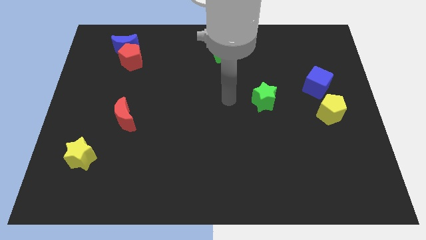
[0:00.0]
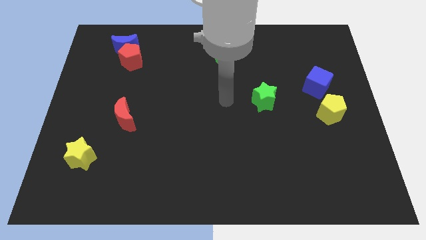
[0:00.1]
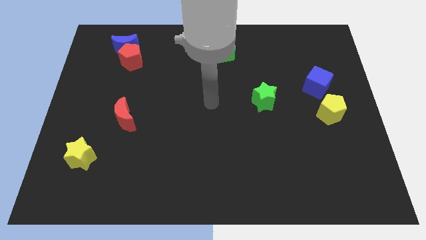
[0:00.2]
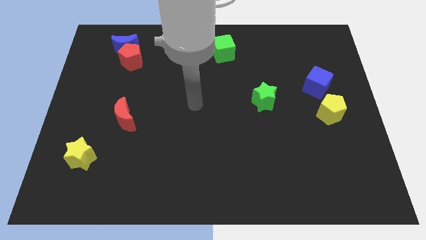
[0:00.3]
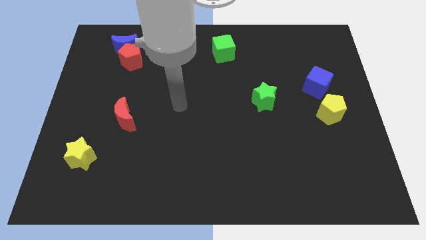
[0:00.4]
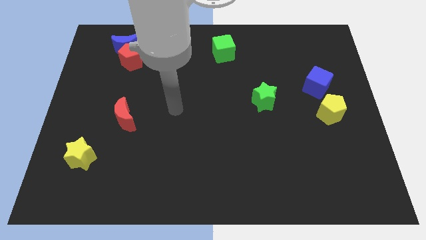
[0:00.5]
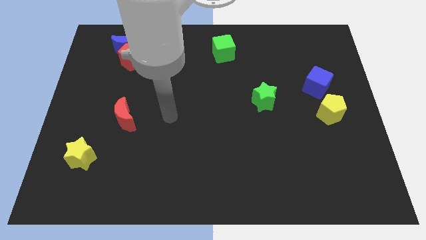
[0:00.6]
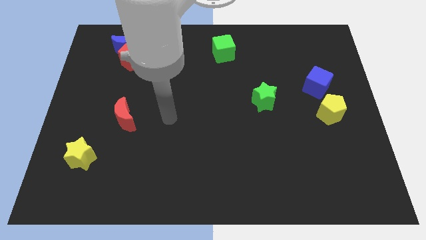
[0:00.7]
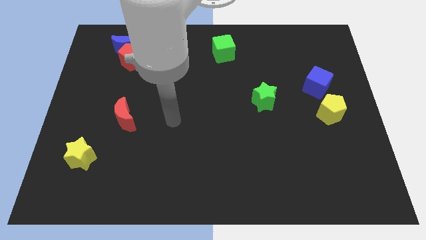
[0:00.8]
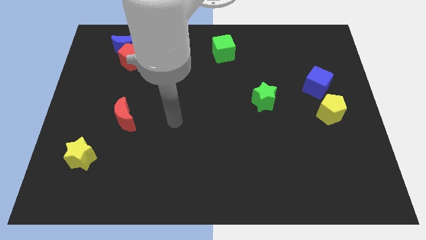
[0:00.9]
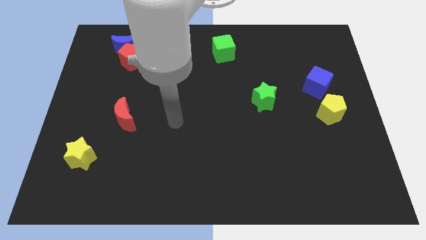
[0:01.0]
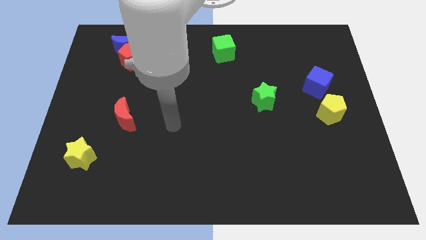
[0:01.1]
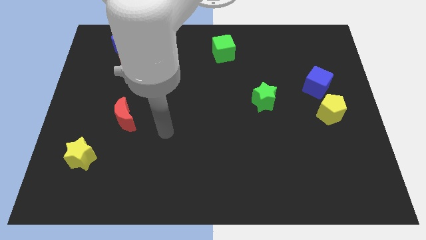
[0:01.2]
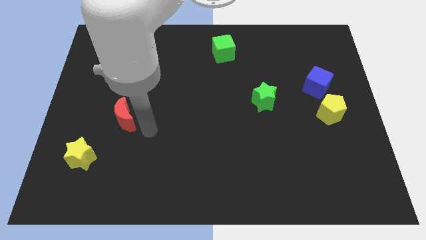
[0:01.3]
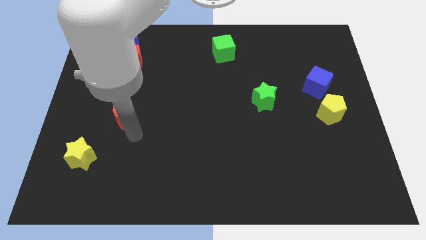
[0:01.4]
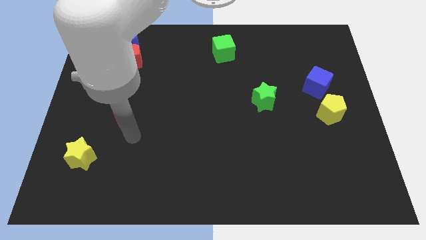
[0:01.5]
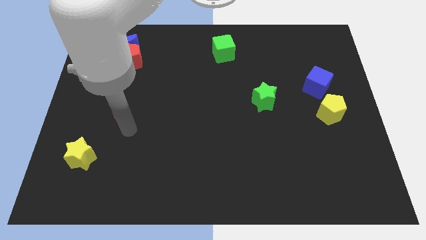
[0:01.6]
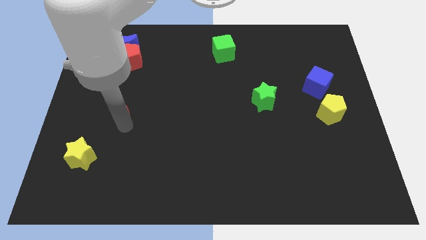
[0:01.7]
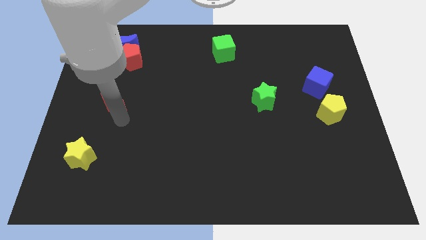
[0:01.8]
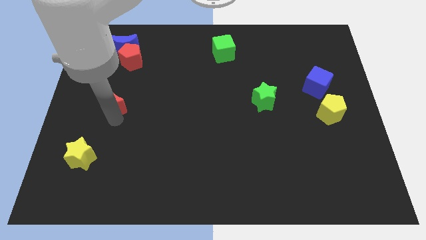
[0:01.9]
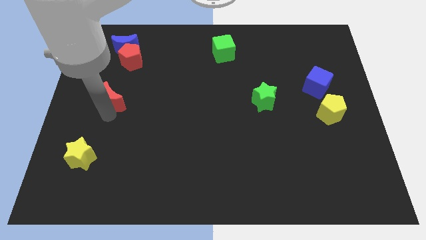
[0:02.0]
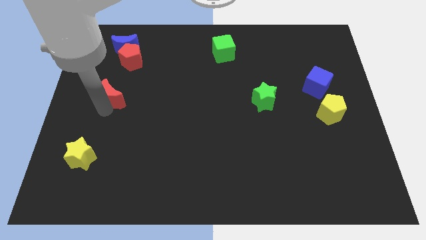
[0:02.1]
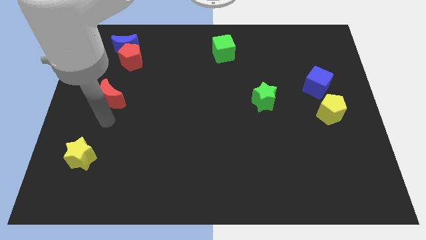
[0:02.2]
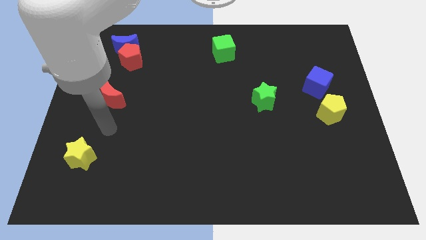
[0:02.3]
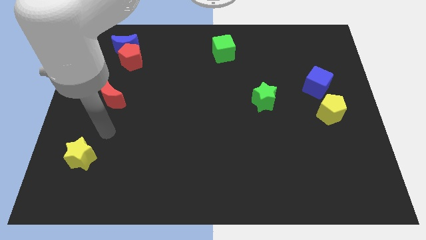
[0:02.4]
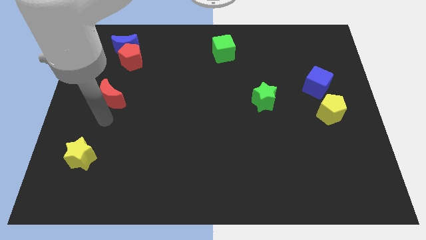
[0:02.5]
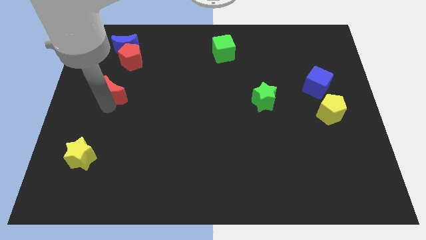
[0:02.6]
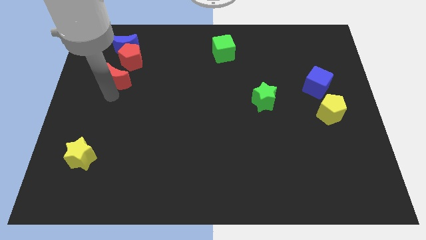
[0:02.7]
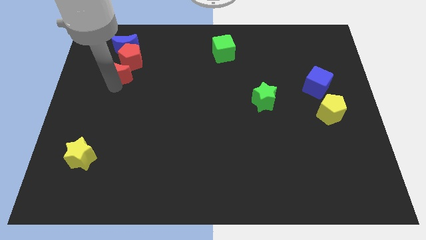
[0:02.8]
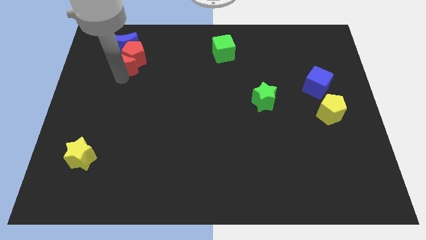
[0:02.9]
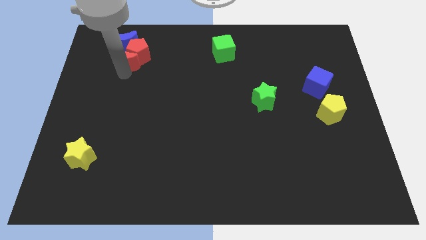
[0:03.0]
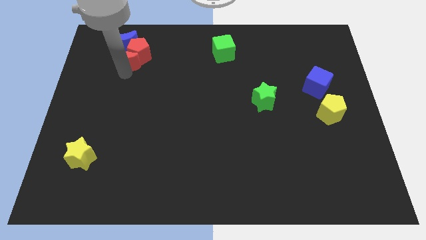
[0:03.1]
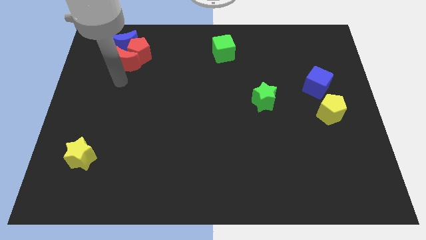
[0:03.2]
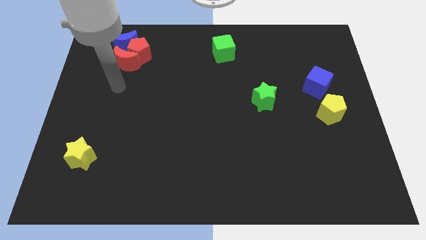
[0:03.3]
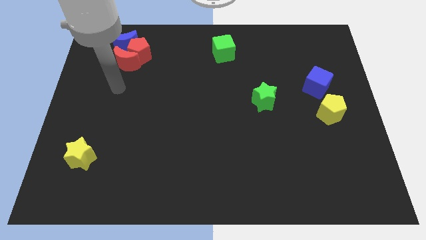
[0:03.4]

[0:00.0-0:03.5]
push the red moon into the red pentagon

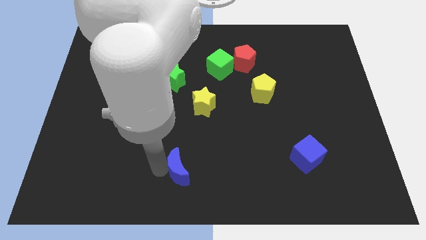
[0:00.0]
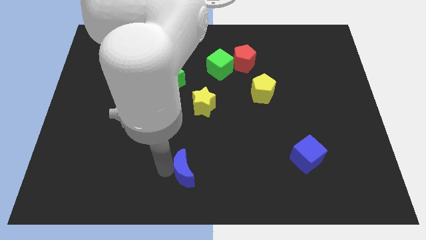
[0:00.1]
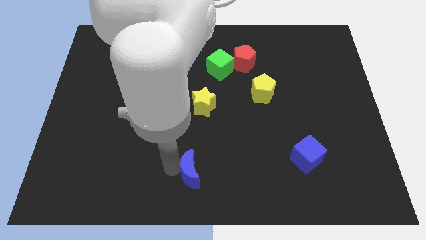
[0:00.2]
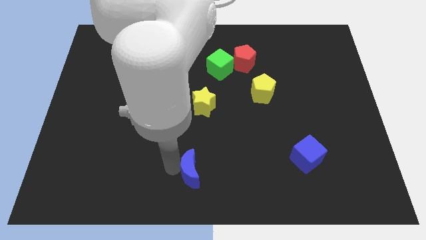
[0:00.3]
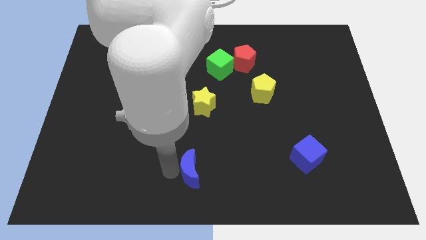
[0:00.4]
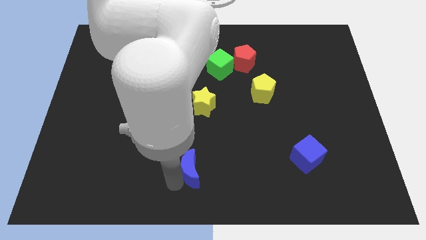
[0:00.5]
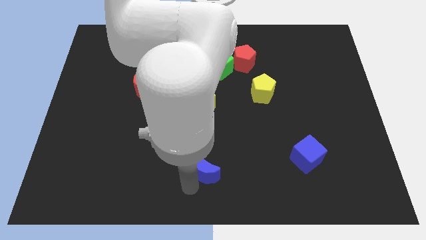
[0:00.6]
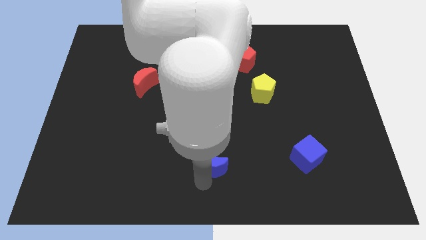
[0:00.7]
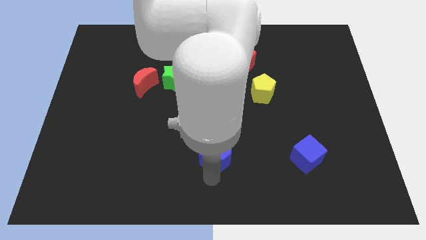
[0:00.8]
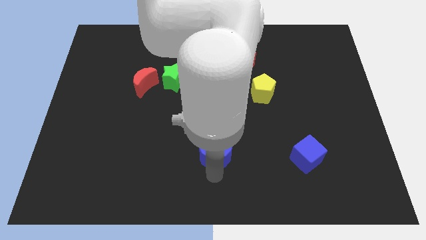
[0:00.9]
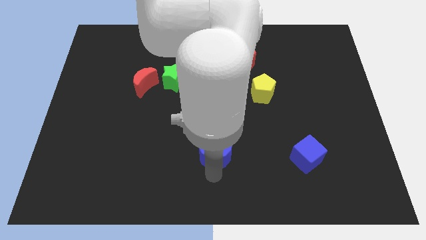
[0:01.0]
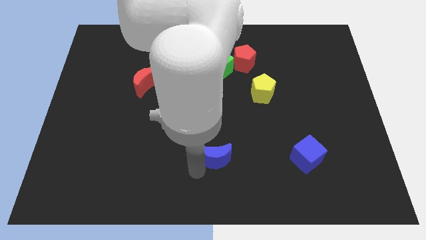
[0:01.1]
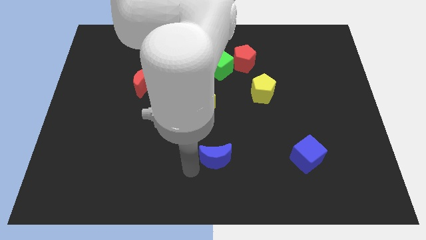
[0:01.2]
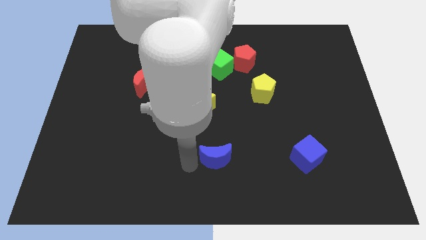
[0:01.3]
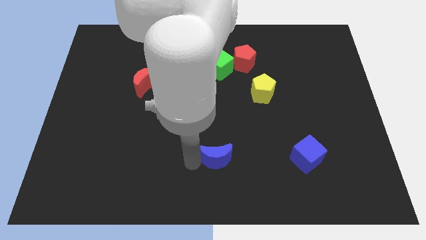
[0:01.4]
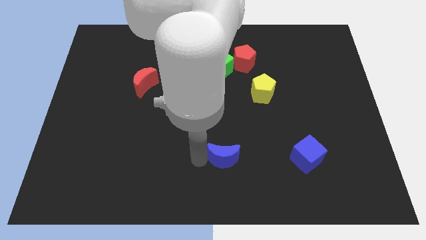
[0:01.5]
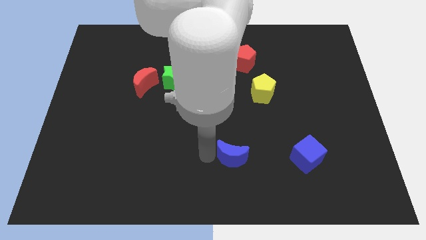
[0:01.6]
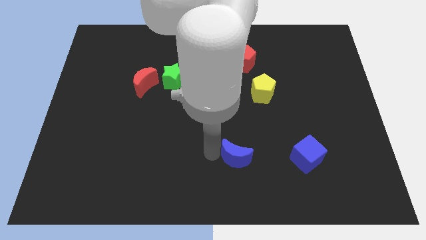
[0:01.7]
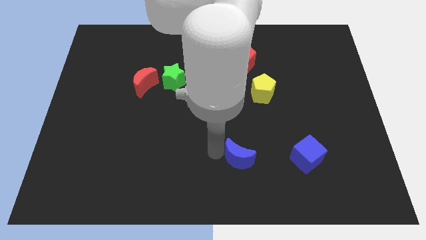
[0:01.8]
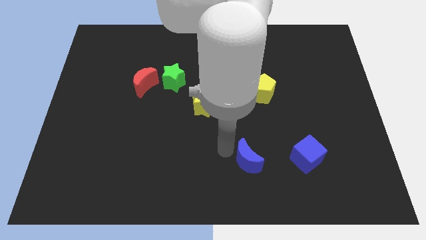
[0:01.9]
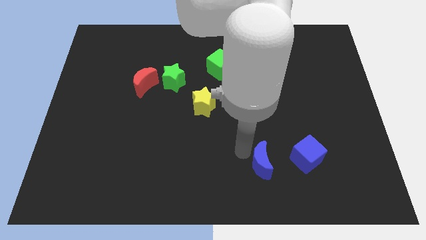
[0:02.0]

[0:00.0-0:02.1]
push the blue crescent towards the blue cube

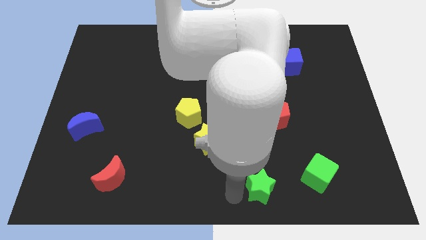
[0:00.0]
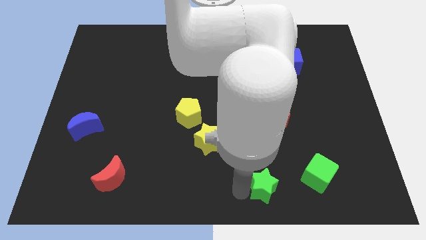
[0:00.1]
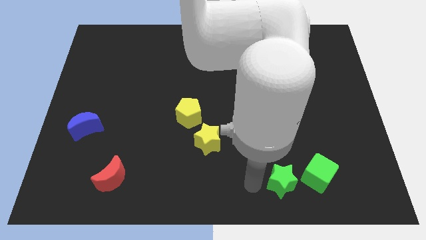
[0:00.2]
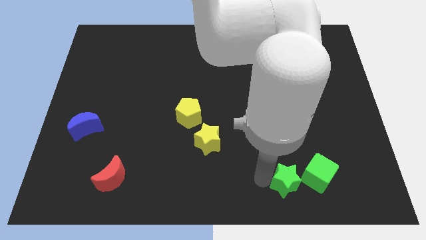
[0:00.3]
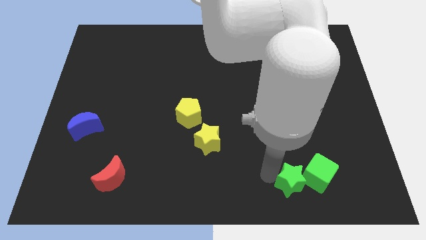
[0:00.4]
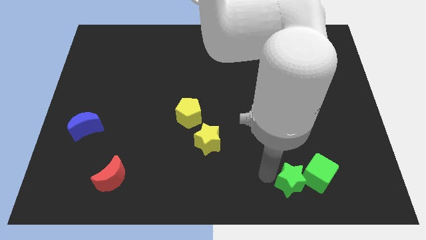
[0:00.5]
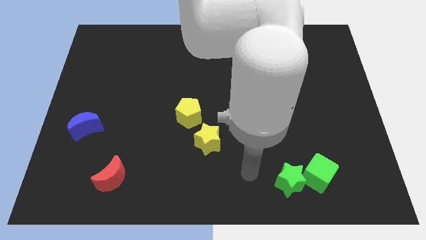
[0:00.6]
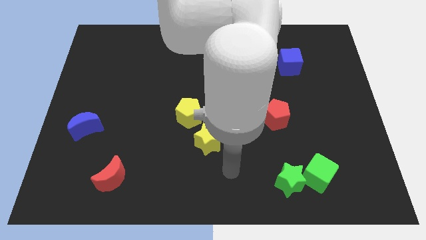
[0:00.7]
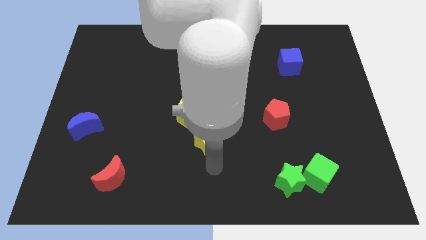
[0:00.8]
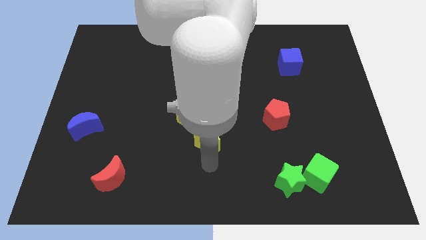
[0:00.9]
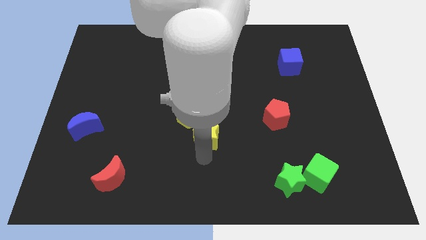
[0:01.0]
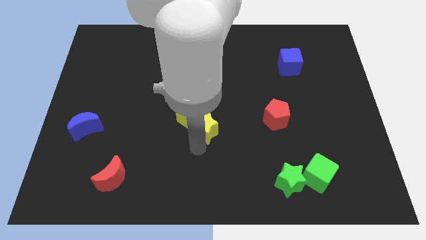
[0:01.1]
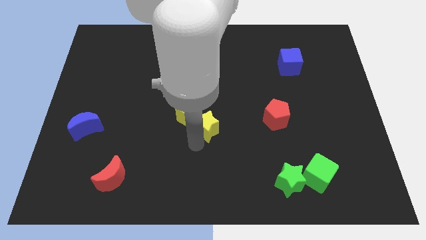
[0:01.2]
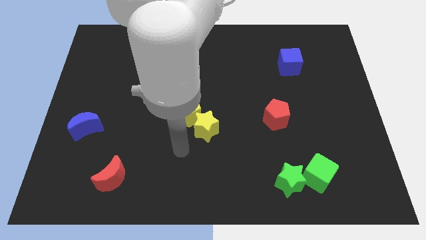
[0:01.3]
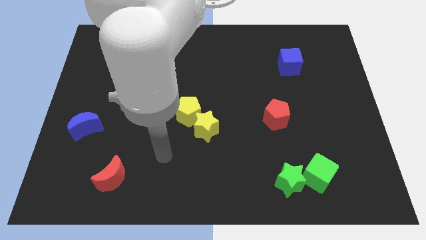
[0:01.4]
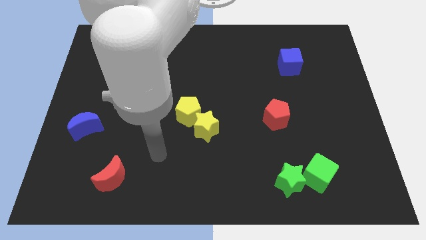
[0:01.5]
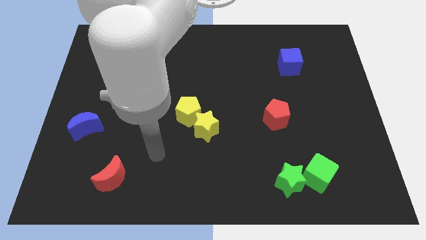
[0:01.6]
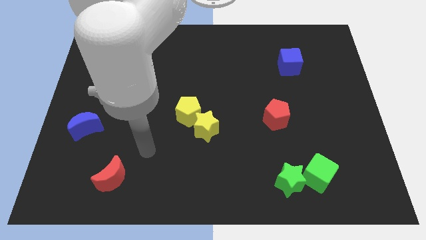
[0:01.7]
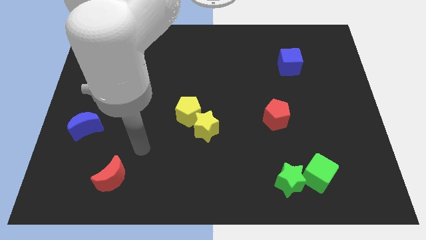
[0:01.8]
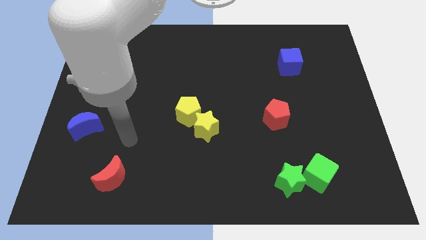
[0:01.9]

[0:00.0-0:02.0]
move the green star towards the left side of the green cube

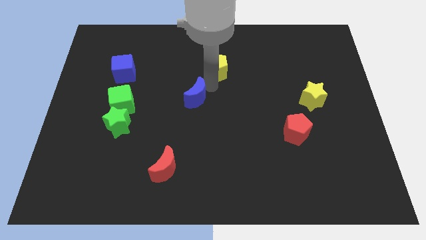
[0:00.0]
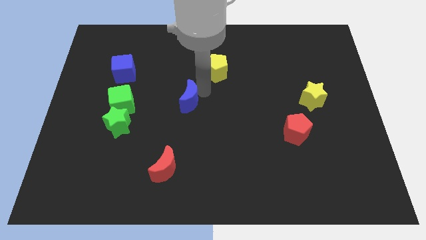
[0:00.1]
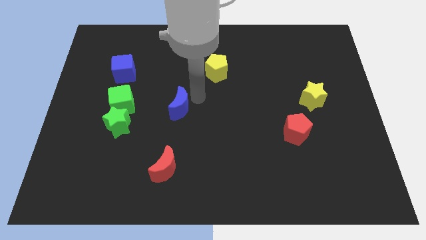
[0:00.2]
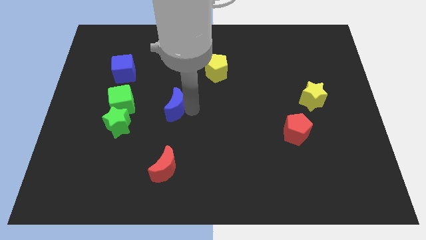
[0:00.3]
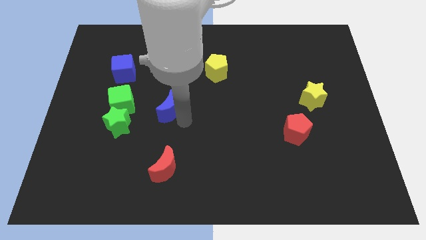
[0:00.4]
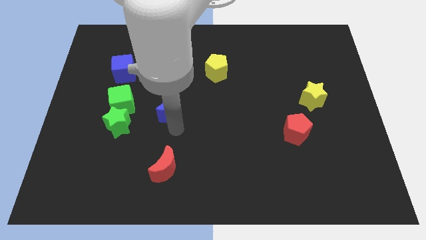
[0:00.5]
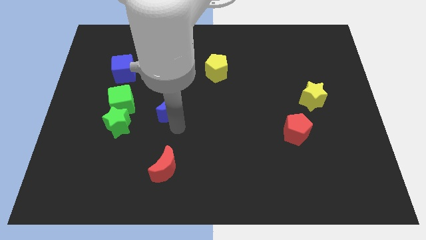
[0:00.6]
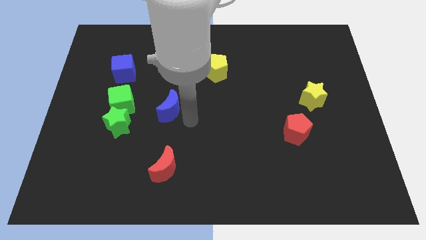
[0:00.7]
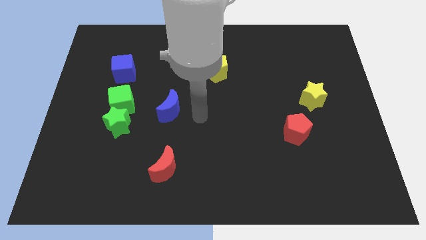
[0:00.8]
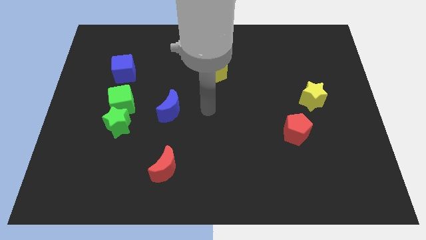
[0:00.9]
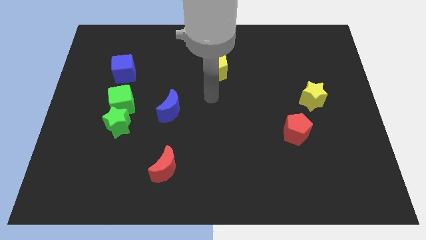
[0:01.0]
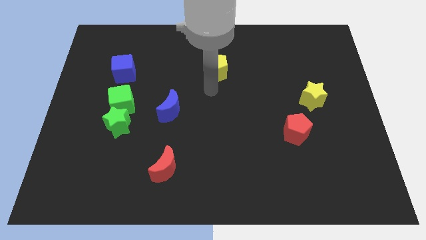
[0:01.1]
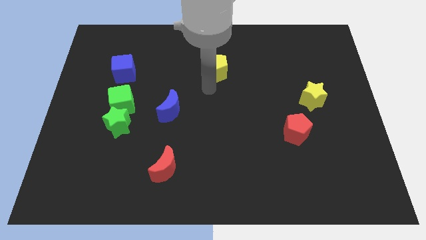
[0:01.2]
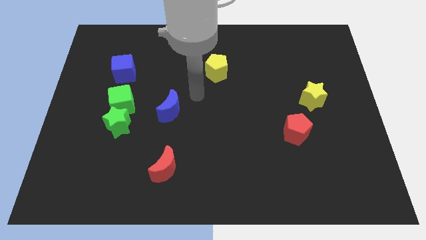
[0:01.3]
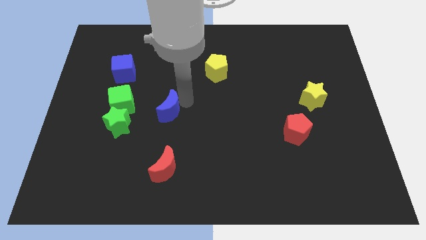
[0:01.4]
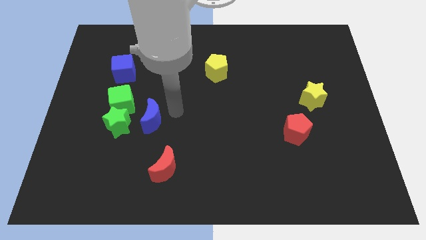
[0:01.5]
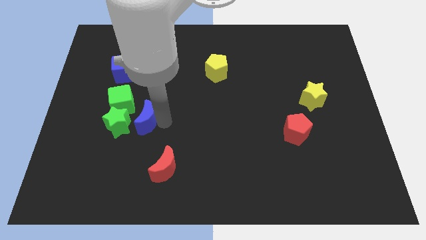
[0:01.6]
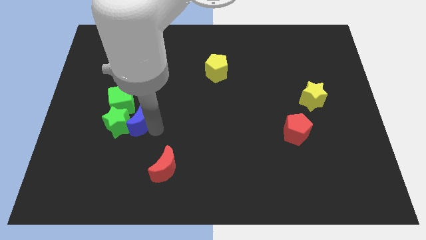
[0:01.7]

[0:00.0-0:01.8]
place the blue crescent to the right side of the green star
